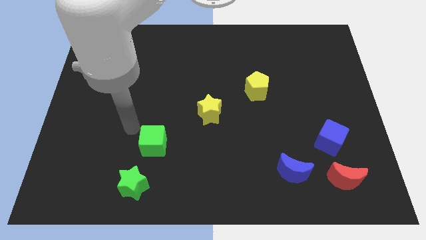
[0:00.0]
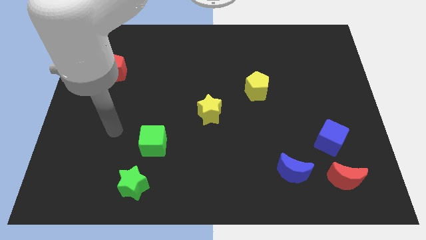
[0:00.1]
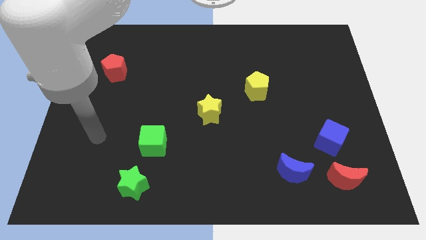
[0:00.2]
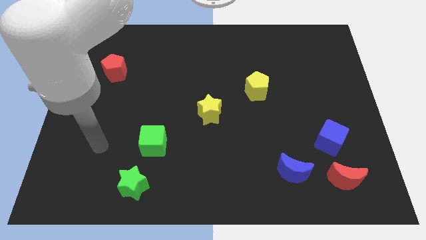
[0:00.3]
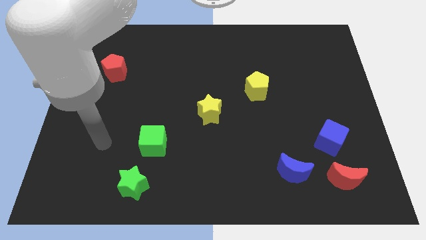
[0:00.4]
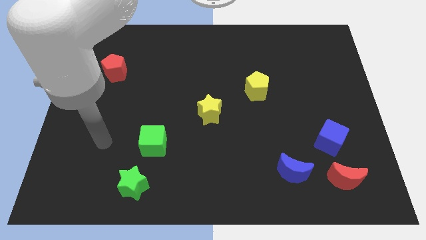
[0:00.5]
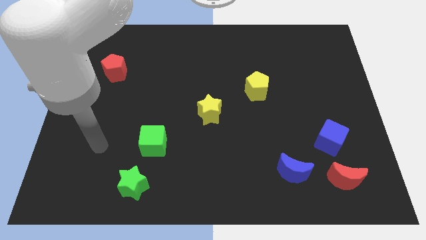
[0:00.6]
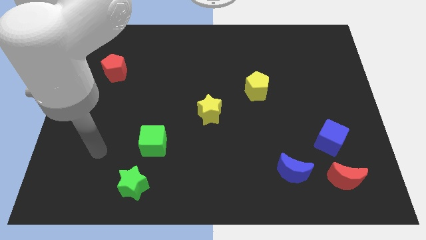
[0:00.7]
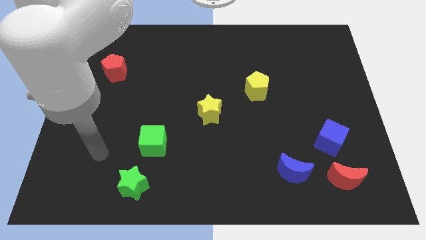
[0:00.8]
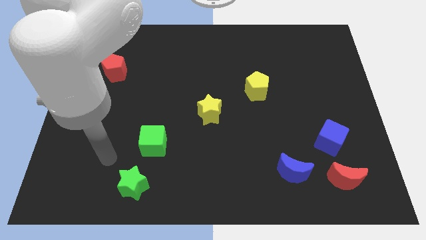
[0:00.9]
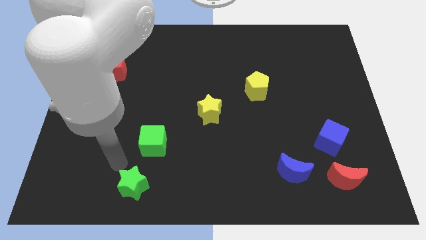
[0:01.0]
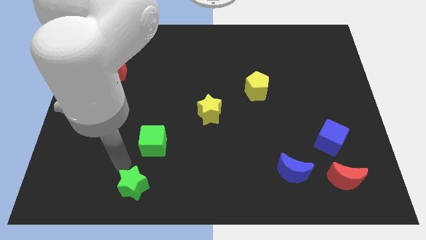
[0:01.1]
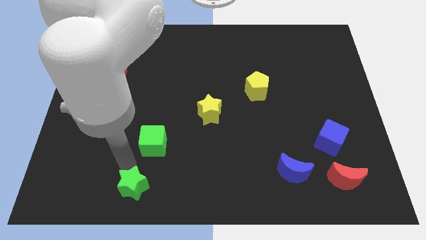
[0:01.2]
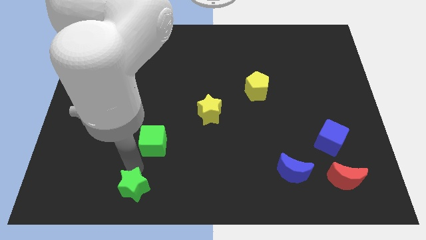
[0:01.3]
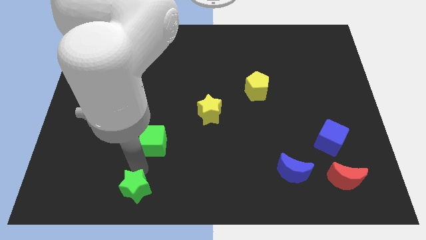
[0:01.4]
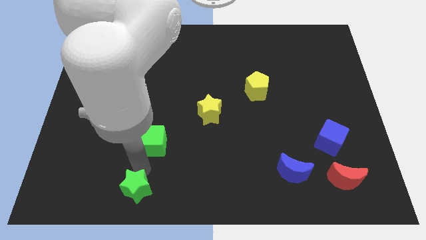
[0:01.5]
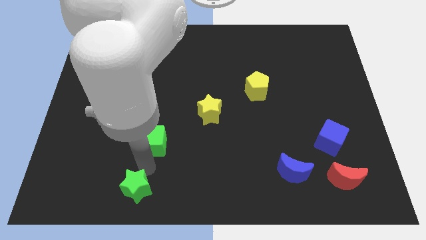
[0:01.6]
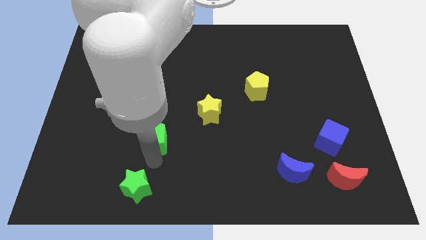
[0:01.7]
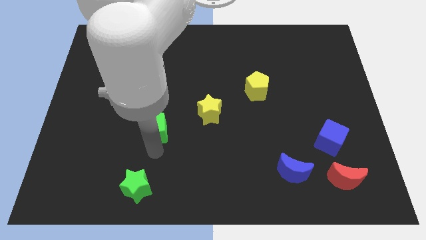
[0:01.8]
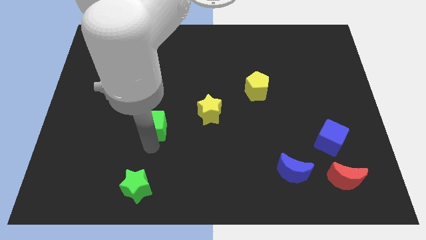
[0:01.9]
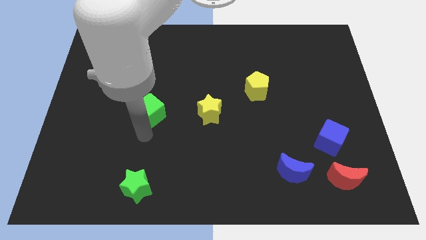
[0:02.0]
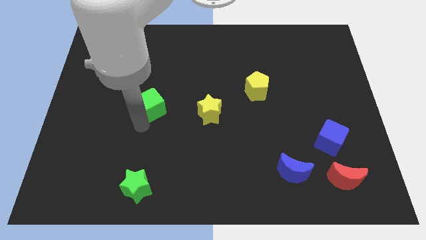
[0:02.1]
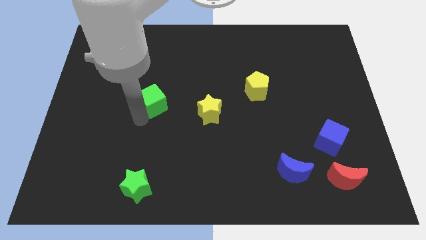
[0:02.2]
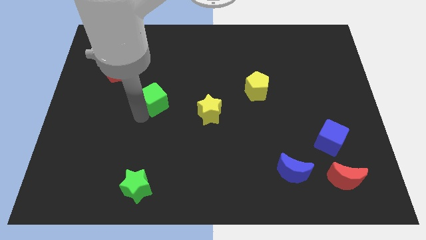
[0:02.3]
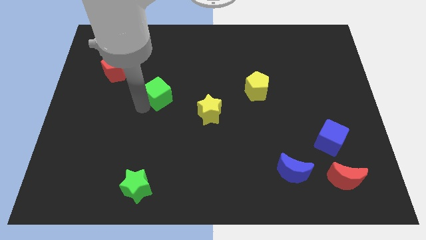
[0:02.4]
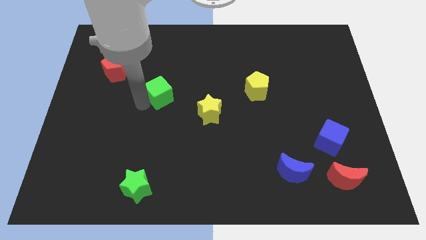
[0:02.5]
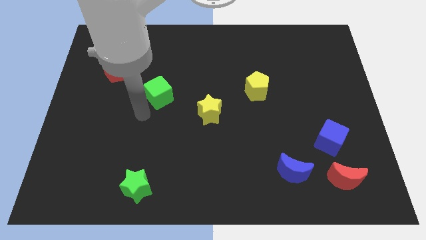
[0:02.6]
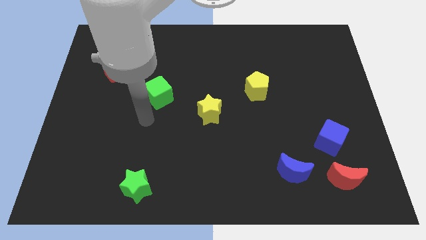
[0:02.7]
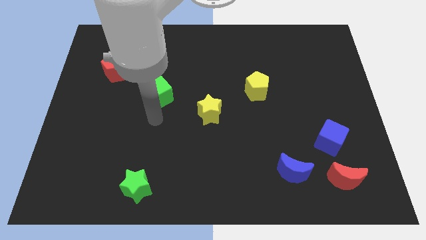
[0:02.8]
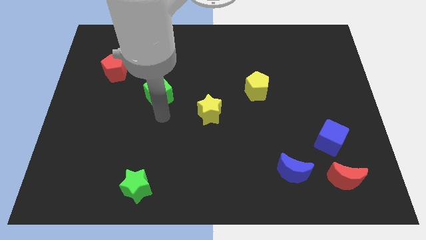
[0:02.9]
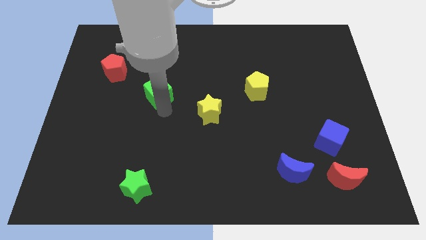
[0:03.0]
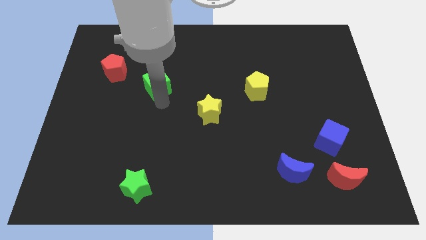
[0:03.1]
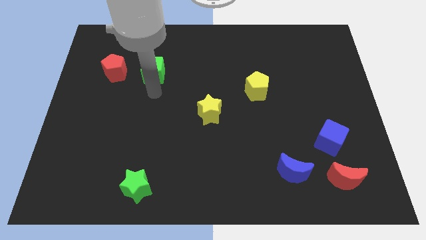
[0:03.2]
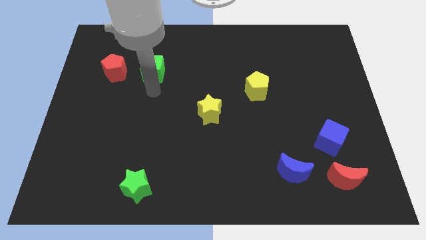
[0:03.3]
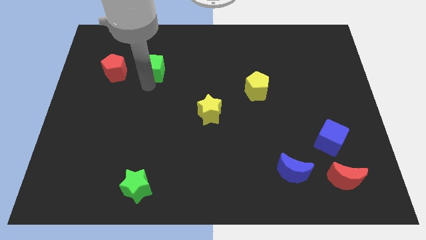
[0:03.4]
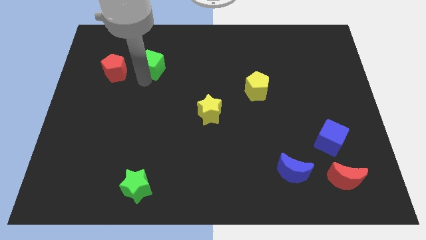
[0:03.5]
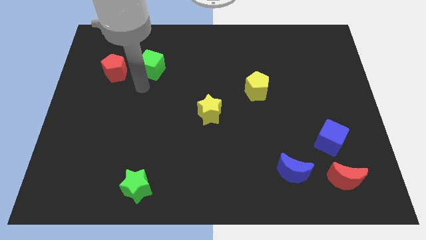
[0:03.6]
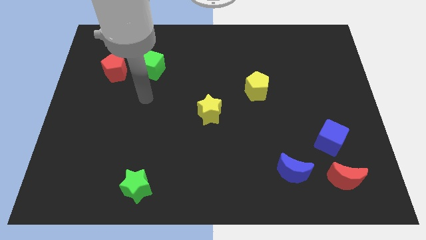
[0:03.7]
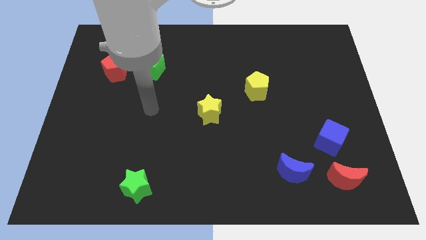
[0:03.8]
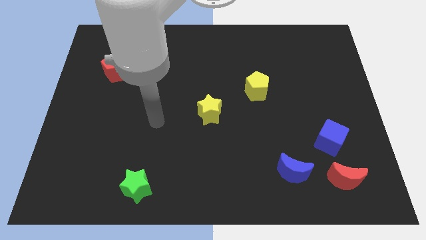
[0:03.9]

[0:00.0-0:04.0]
push the green cube to the right of red pentagon

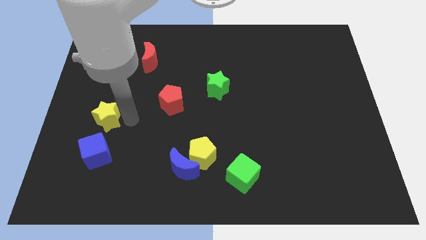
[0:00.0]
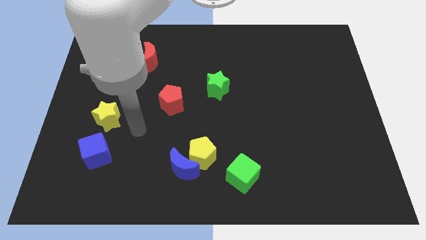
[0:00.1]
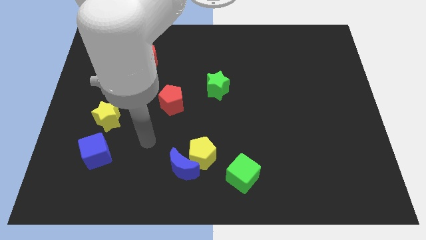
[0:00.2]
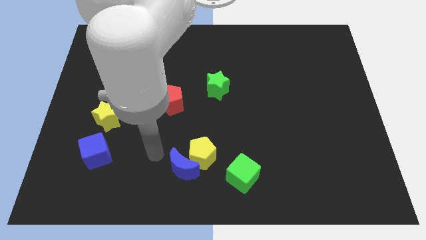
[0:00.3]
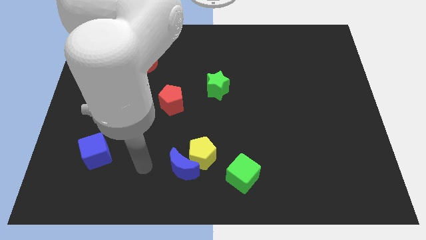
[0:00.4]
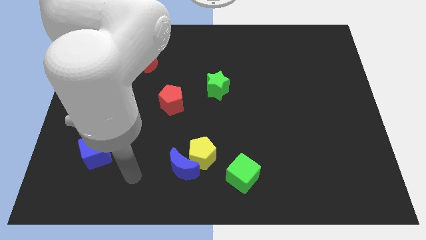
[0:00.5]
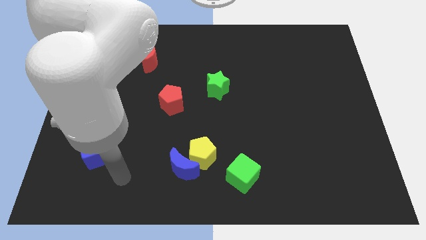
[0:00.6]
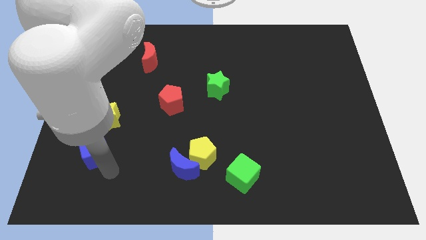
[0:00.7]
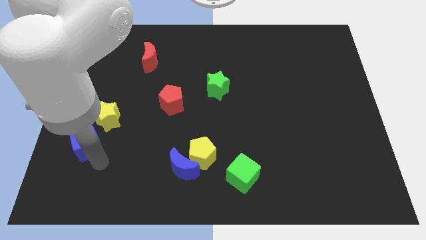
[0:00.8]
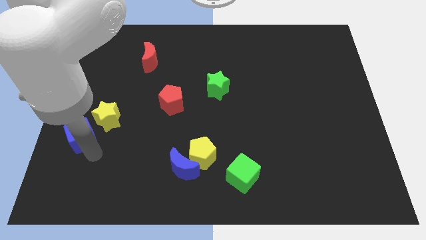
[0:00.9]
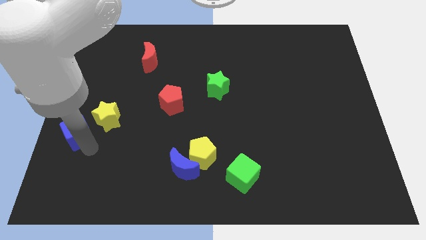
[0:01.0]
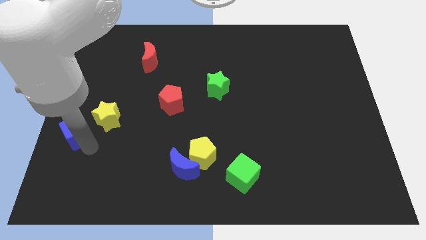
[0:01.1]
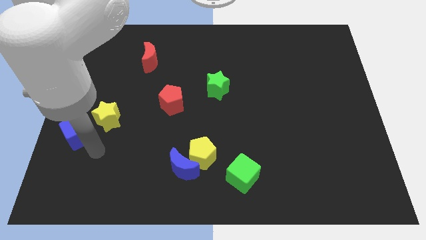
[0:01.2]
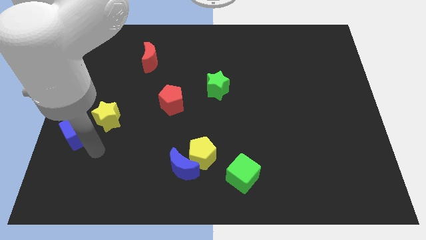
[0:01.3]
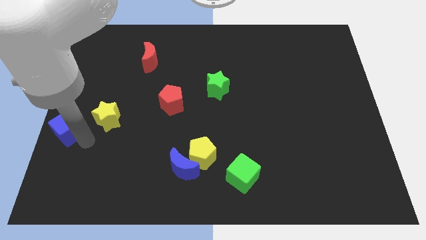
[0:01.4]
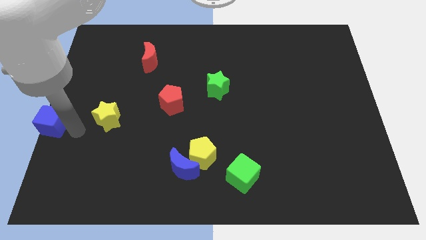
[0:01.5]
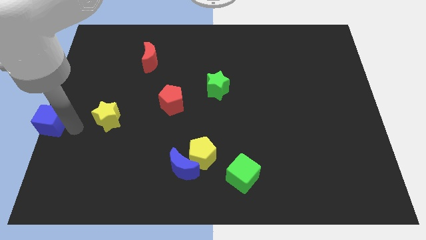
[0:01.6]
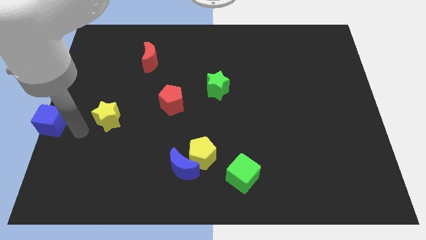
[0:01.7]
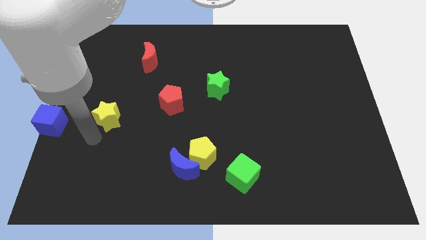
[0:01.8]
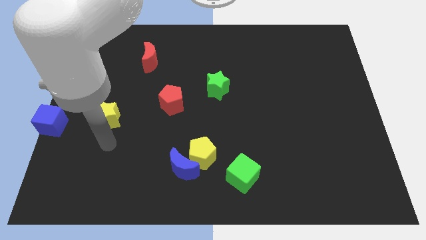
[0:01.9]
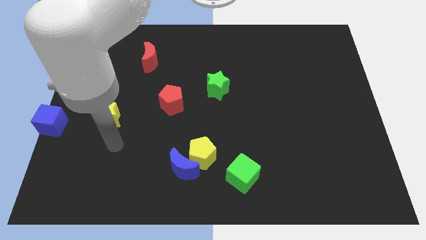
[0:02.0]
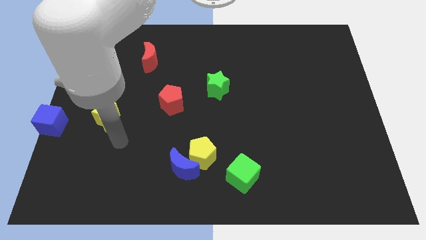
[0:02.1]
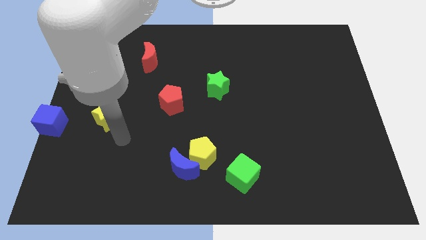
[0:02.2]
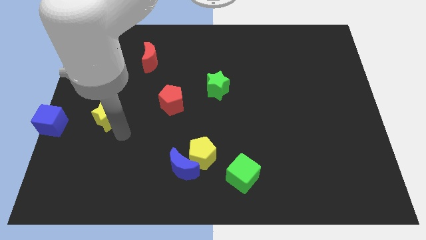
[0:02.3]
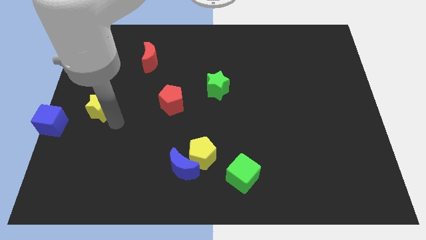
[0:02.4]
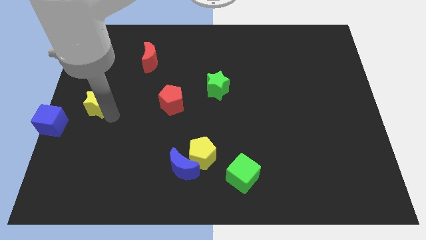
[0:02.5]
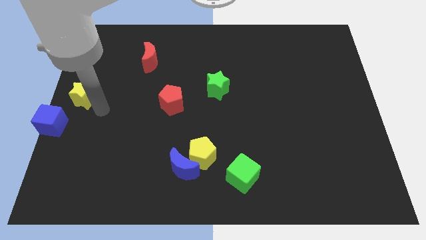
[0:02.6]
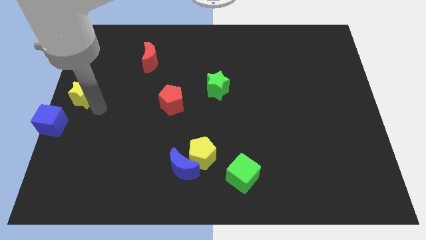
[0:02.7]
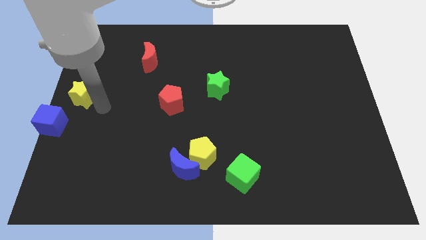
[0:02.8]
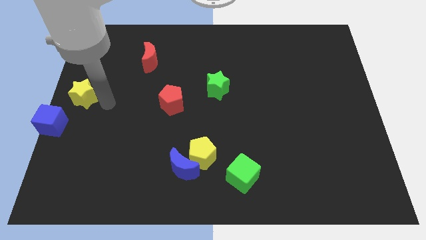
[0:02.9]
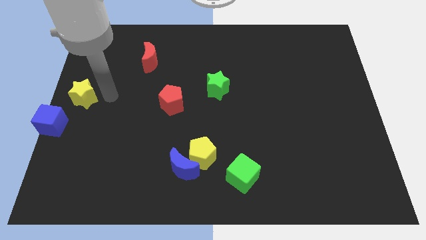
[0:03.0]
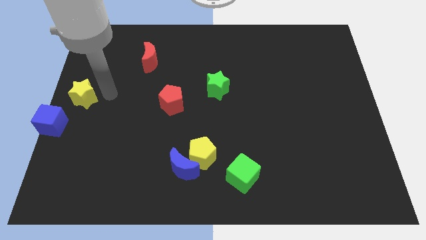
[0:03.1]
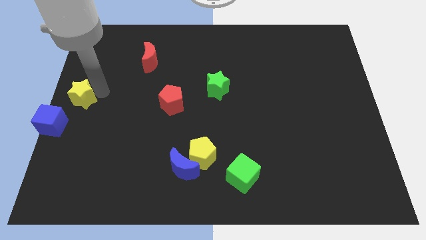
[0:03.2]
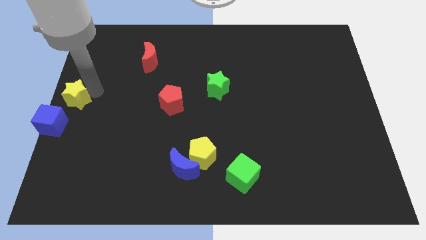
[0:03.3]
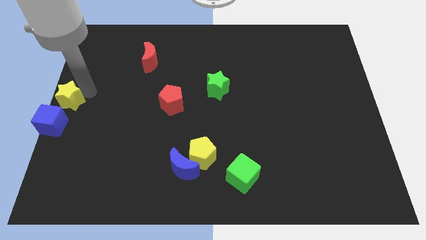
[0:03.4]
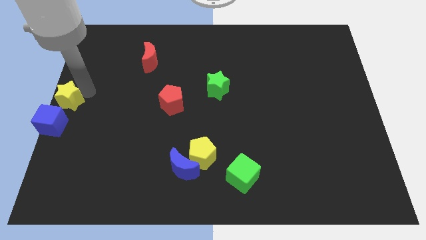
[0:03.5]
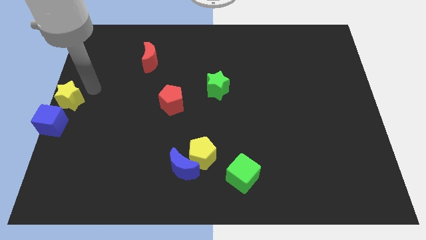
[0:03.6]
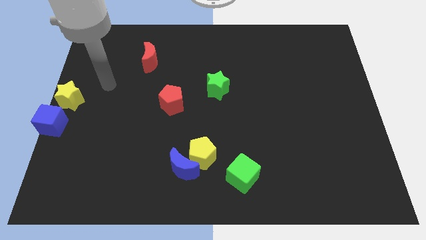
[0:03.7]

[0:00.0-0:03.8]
put the blue cube and yellow star to the center left of the board

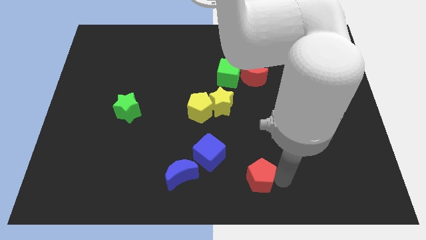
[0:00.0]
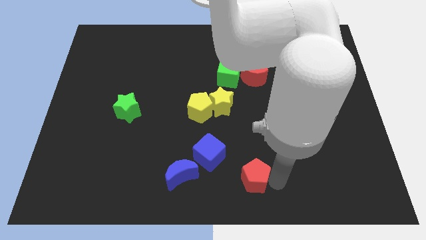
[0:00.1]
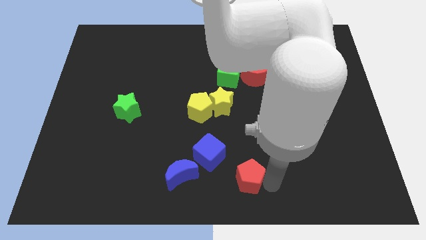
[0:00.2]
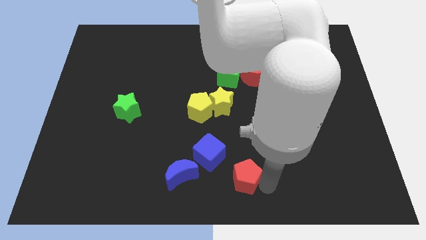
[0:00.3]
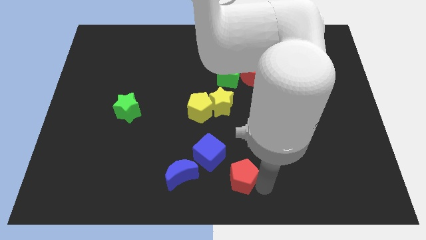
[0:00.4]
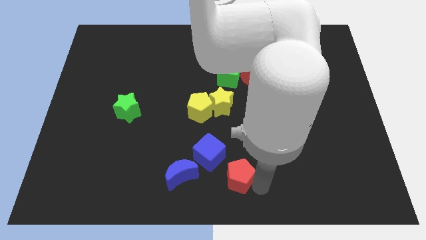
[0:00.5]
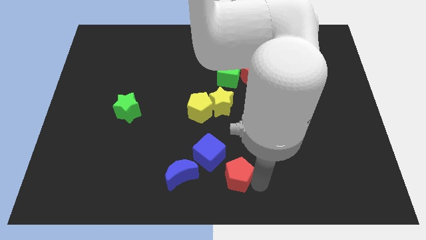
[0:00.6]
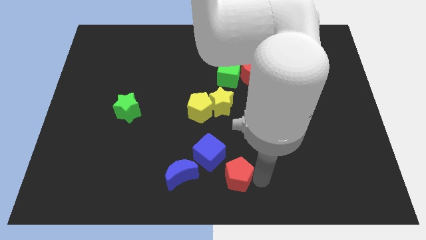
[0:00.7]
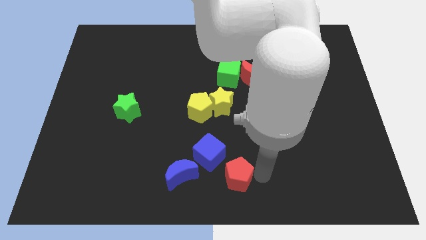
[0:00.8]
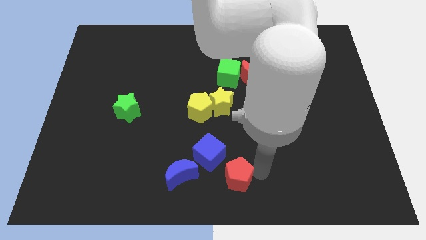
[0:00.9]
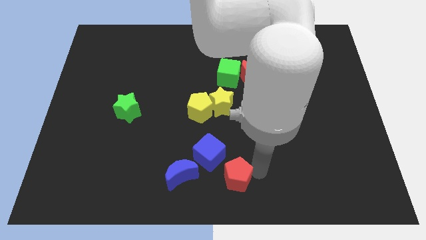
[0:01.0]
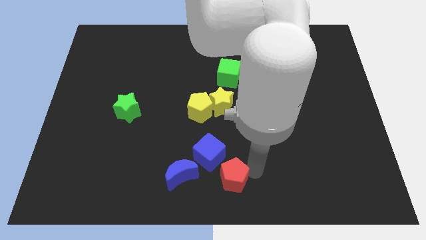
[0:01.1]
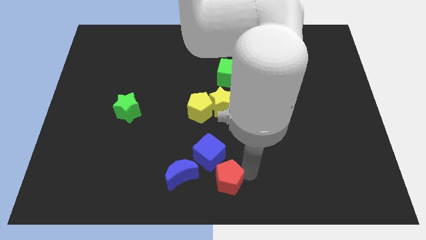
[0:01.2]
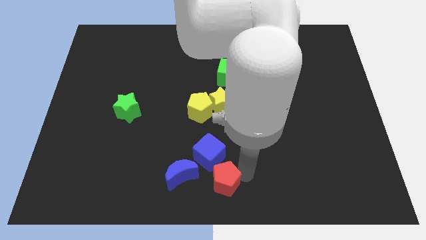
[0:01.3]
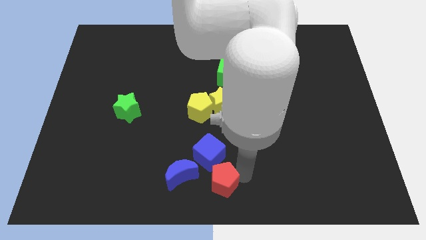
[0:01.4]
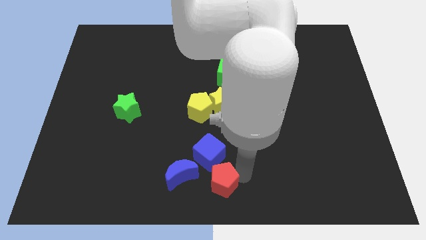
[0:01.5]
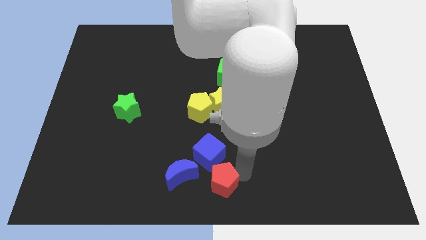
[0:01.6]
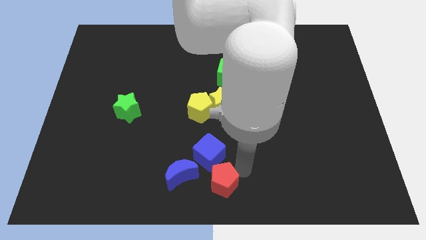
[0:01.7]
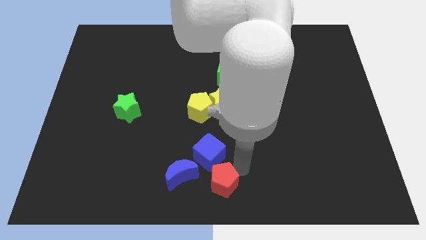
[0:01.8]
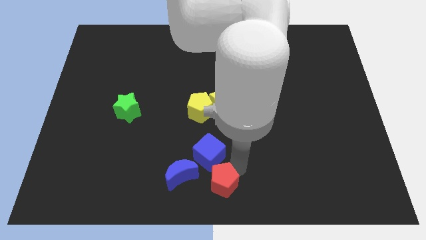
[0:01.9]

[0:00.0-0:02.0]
move the red pentagon close to the blue blocks
